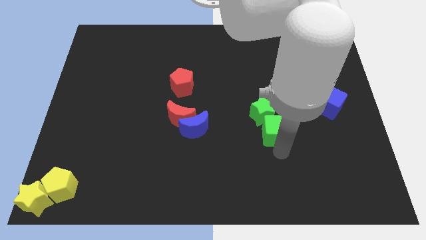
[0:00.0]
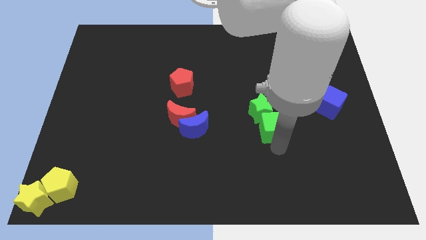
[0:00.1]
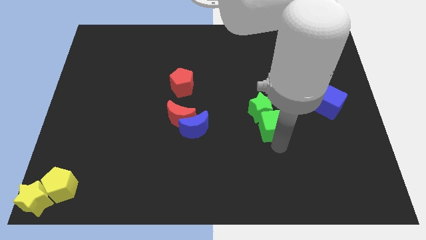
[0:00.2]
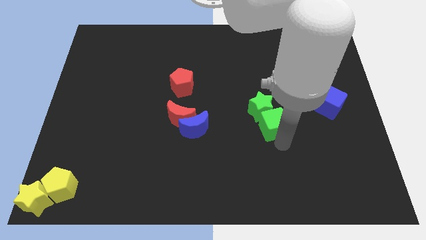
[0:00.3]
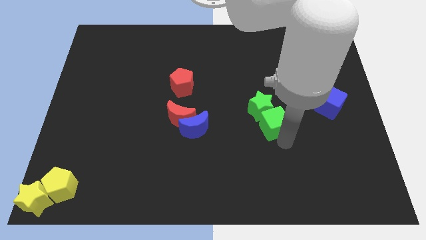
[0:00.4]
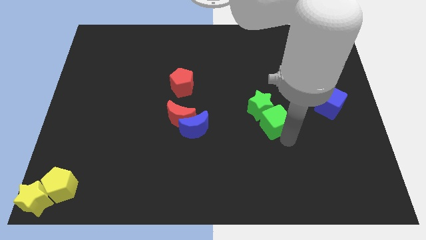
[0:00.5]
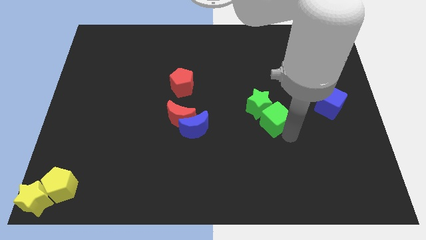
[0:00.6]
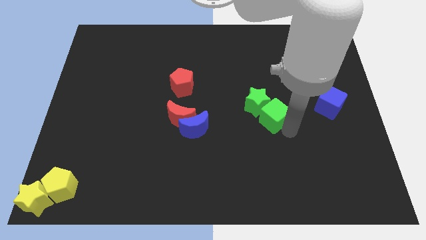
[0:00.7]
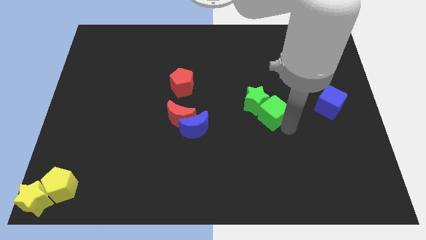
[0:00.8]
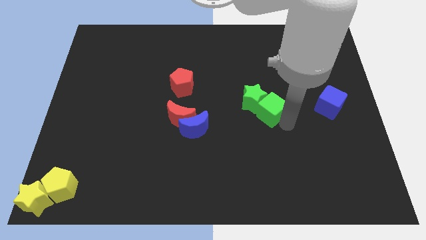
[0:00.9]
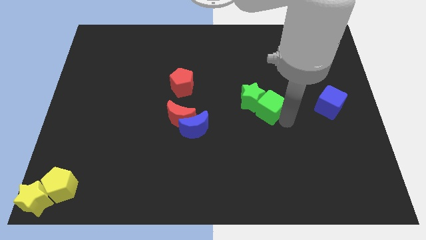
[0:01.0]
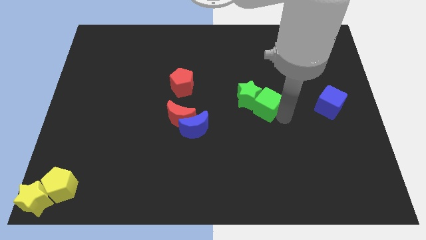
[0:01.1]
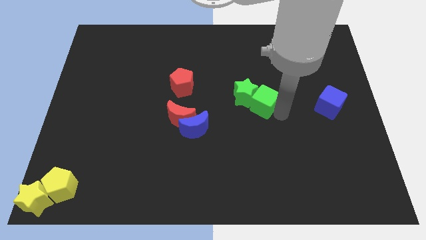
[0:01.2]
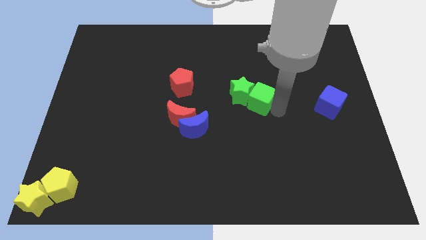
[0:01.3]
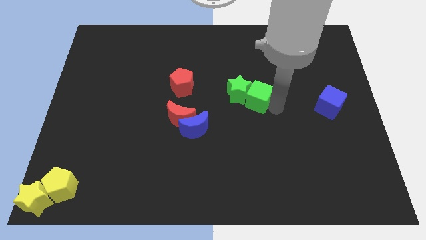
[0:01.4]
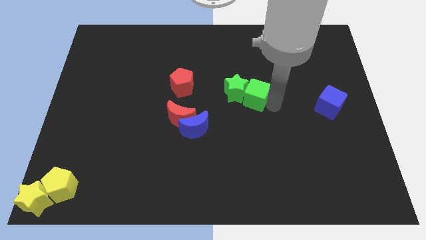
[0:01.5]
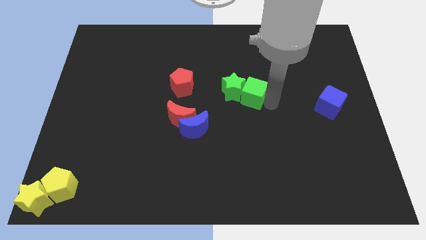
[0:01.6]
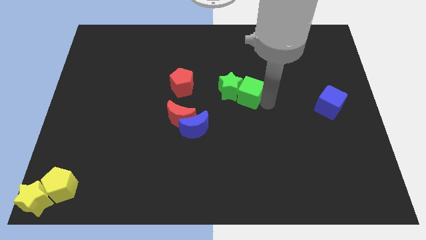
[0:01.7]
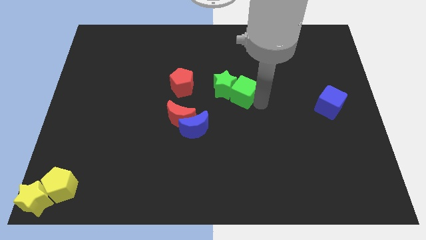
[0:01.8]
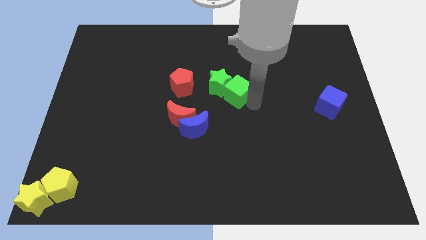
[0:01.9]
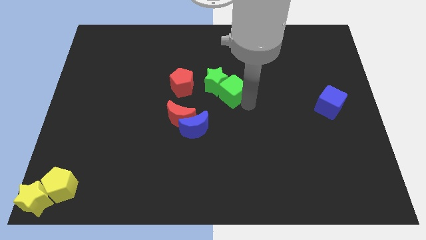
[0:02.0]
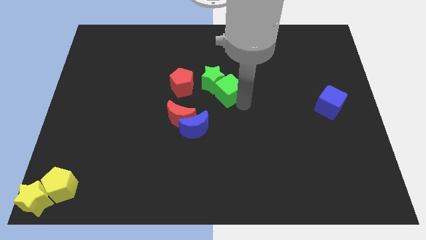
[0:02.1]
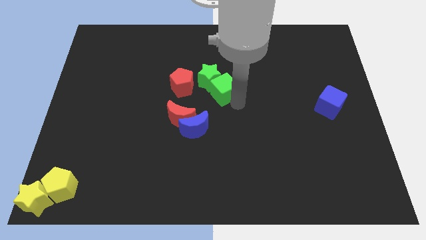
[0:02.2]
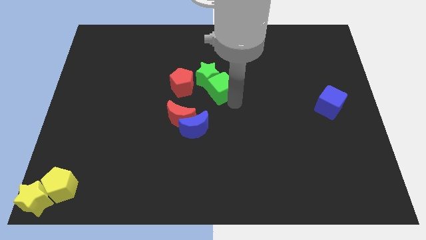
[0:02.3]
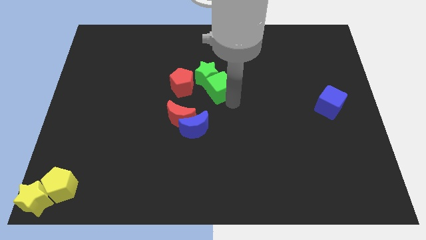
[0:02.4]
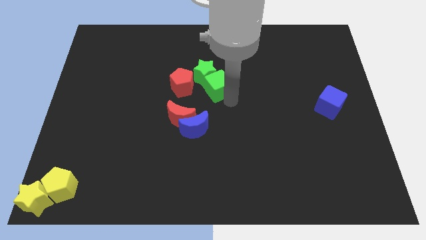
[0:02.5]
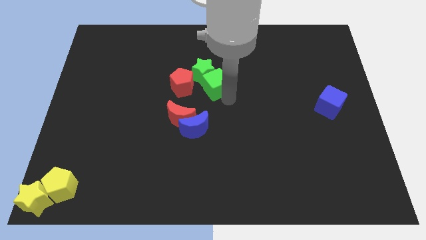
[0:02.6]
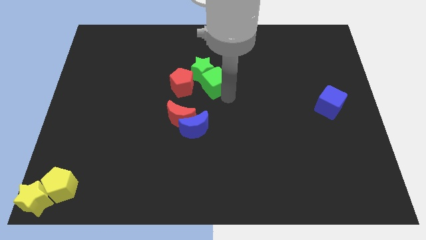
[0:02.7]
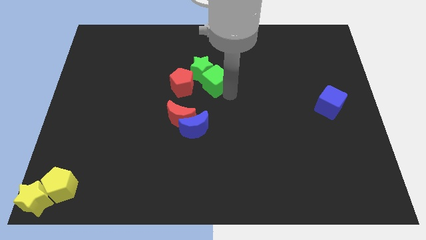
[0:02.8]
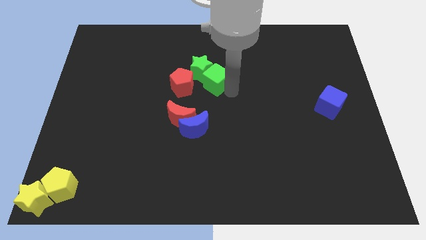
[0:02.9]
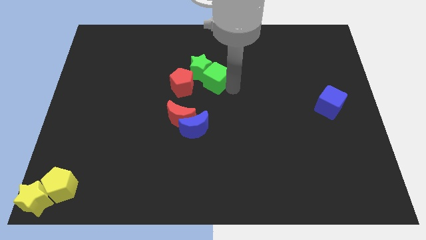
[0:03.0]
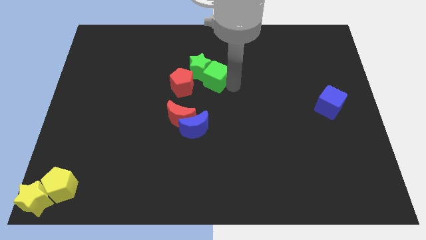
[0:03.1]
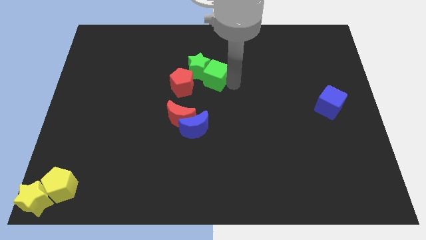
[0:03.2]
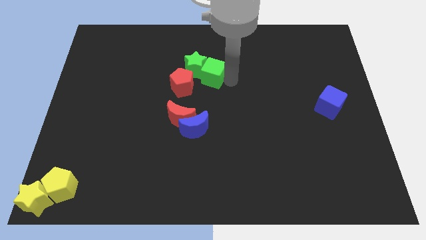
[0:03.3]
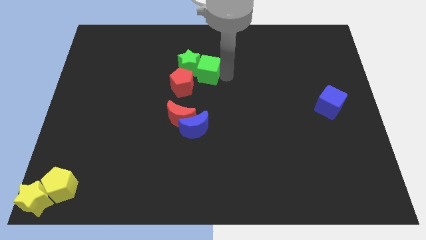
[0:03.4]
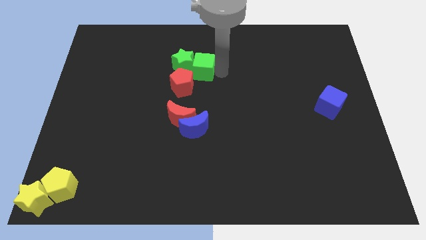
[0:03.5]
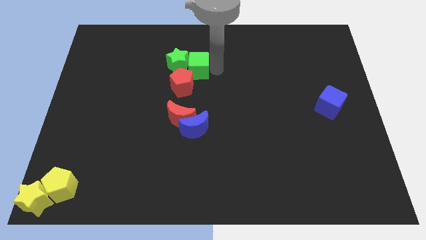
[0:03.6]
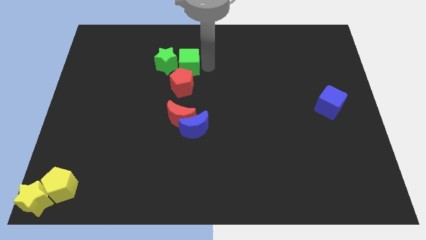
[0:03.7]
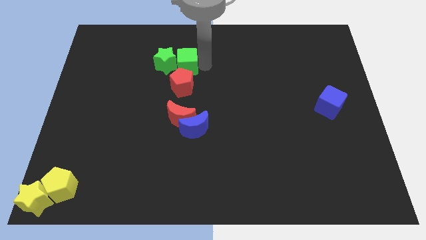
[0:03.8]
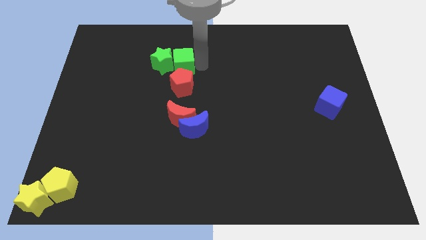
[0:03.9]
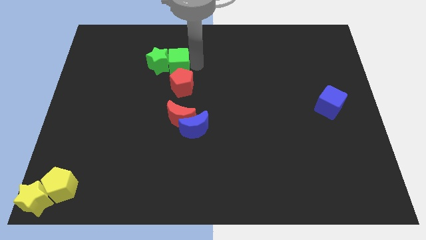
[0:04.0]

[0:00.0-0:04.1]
push the green cube along with green star to the top of the red pentagon

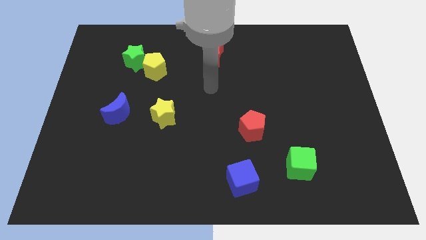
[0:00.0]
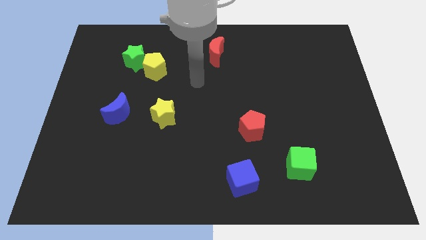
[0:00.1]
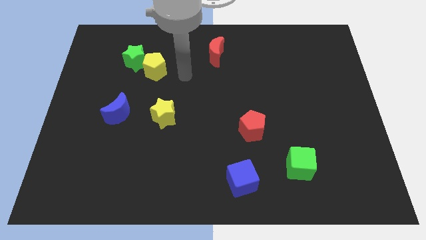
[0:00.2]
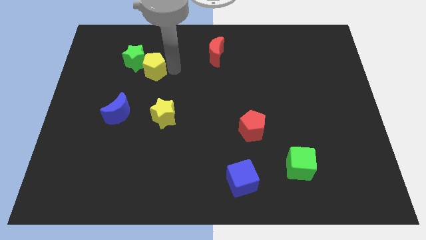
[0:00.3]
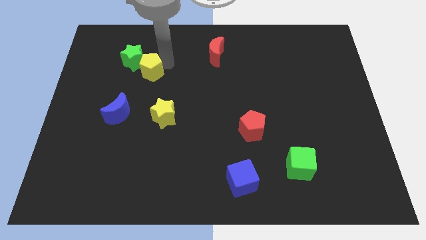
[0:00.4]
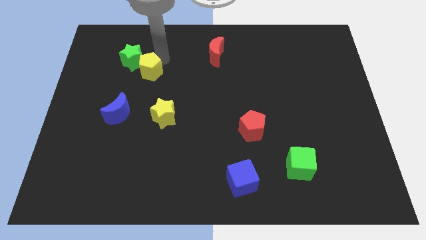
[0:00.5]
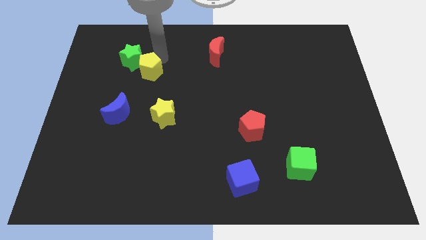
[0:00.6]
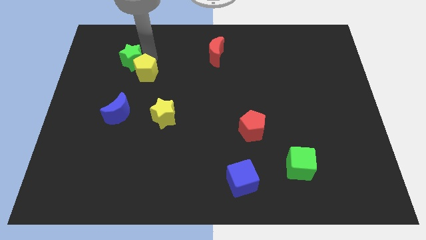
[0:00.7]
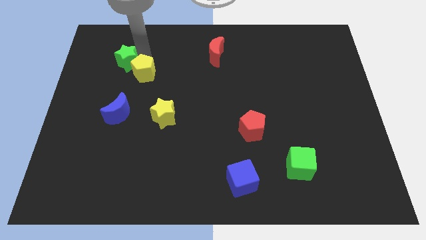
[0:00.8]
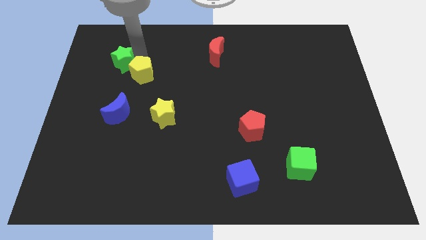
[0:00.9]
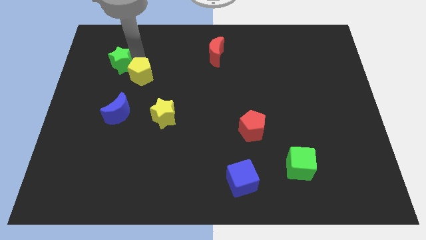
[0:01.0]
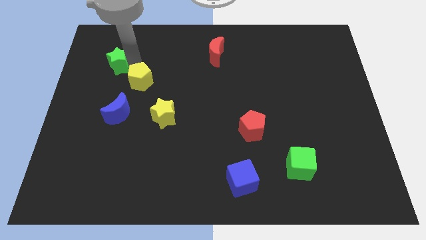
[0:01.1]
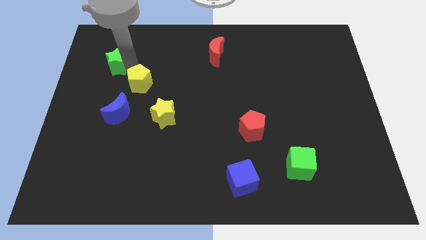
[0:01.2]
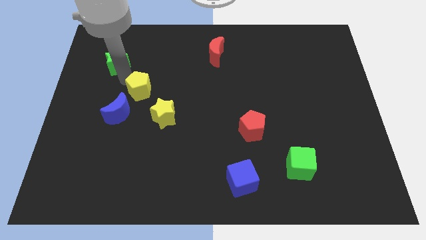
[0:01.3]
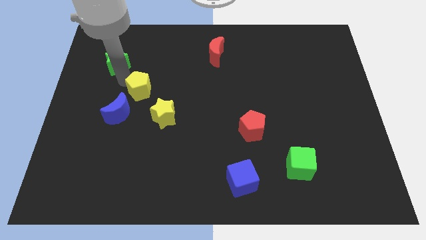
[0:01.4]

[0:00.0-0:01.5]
push the yellow pentagon into the blue crescent

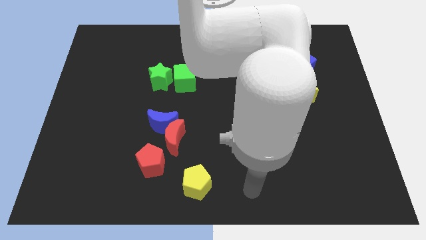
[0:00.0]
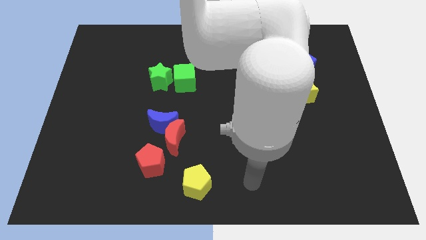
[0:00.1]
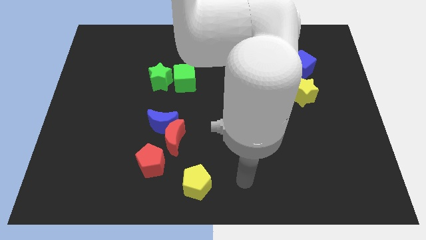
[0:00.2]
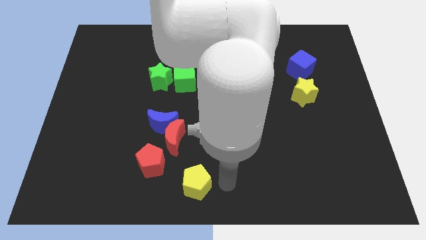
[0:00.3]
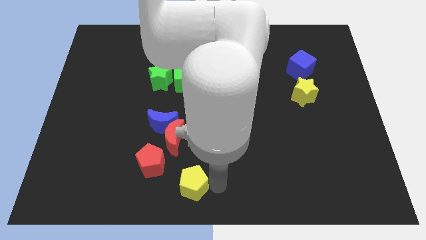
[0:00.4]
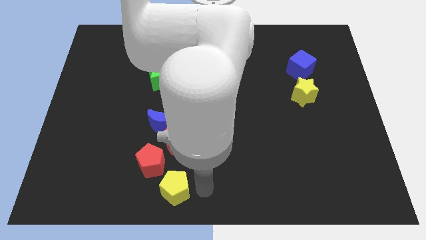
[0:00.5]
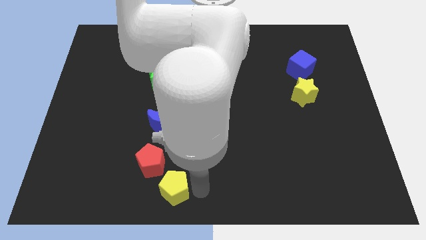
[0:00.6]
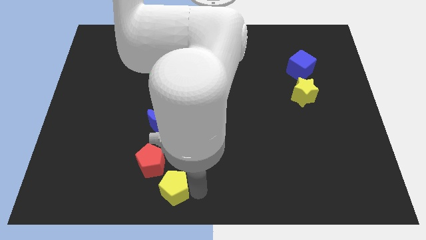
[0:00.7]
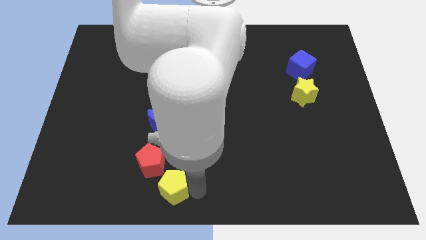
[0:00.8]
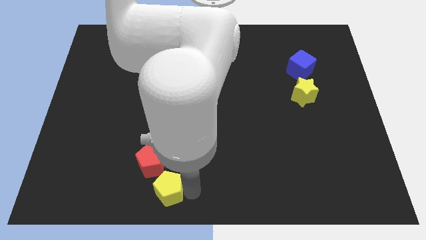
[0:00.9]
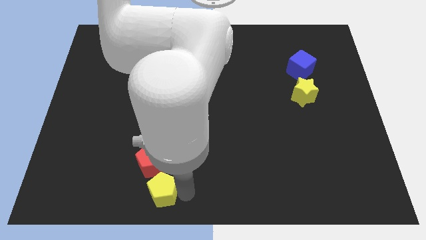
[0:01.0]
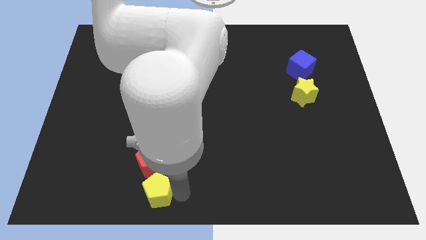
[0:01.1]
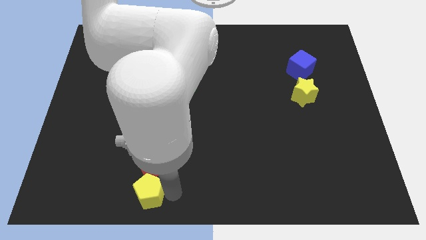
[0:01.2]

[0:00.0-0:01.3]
move the yellow pentagon below the red pentagon

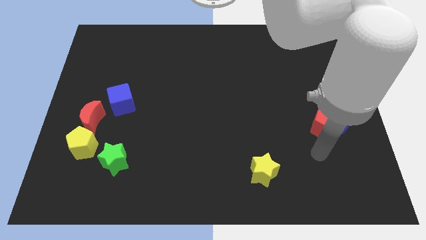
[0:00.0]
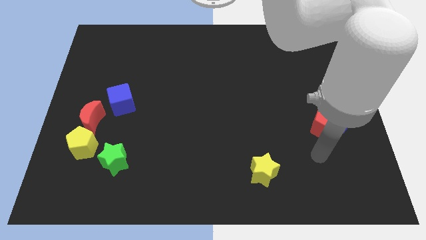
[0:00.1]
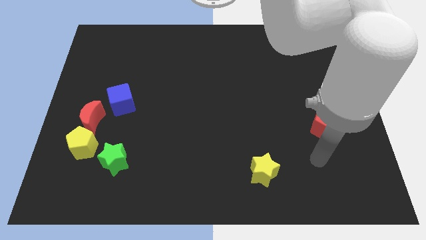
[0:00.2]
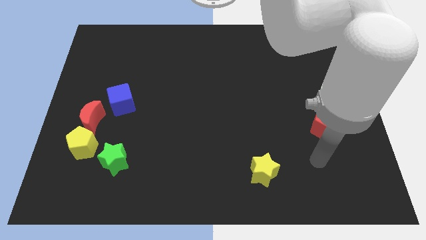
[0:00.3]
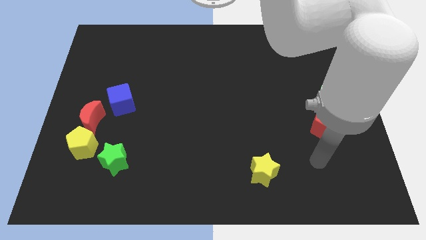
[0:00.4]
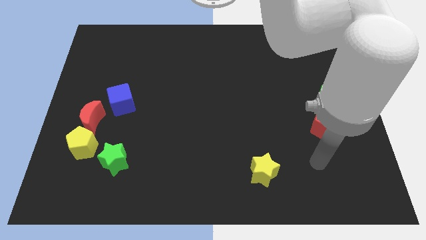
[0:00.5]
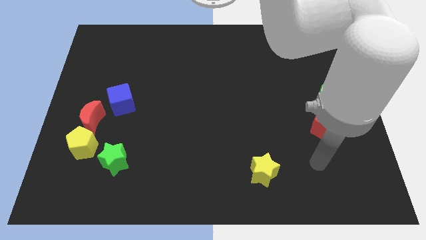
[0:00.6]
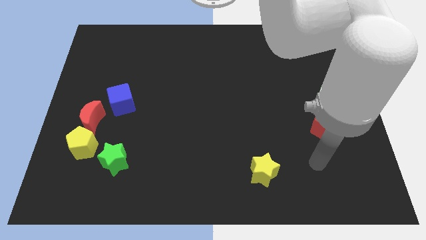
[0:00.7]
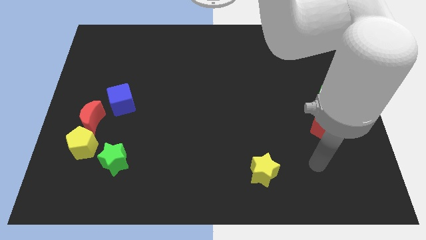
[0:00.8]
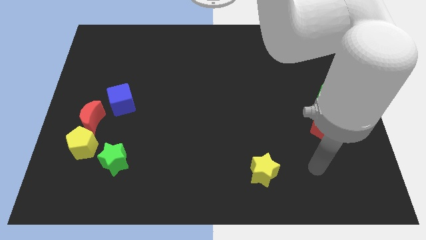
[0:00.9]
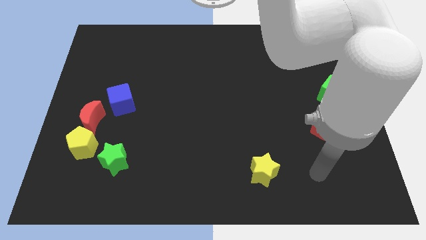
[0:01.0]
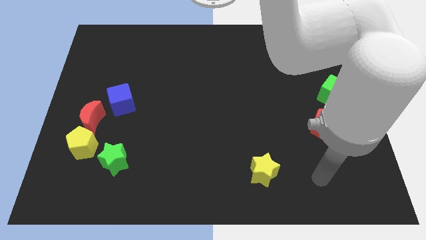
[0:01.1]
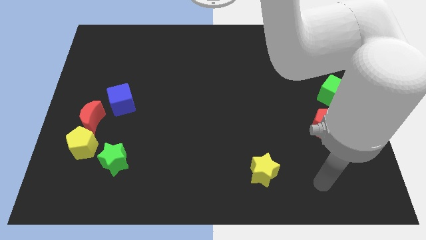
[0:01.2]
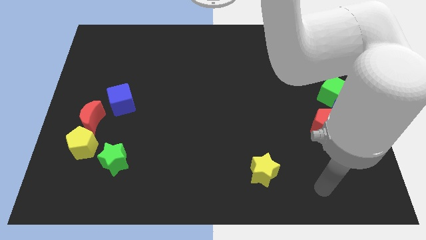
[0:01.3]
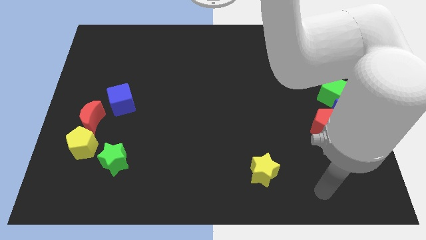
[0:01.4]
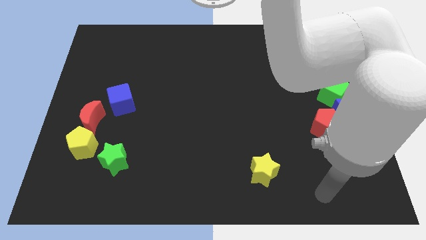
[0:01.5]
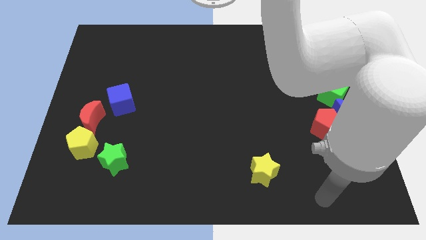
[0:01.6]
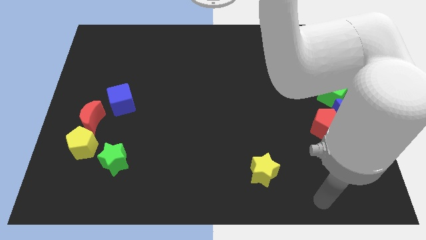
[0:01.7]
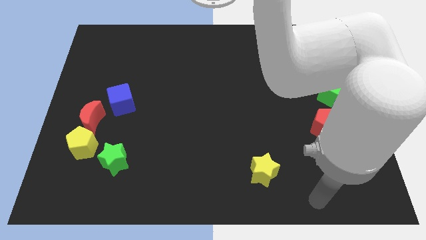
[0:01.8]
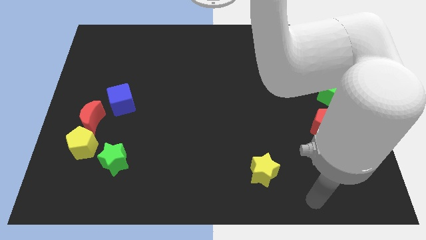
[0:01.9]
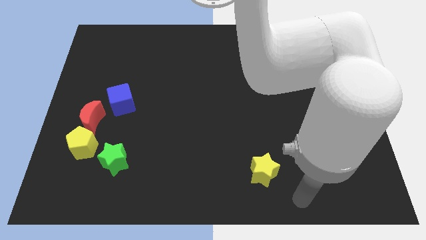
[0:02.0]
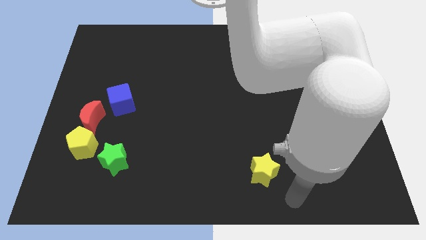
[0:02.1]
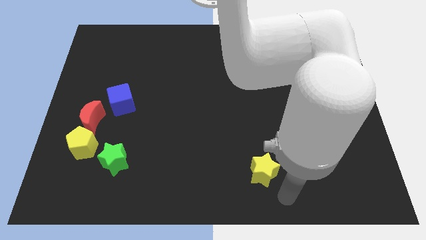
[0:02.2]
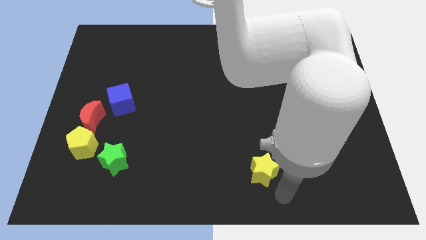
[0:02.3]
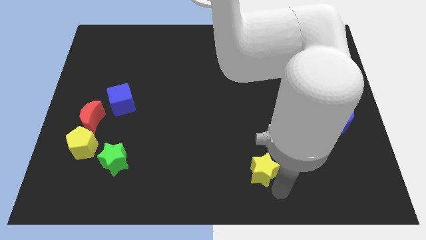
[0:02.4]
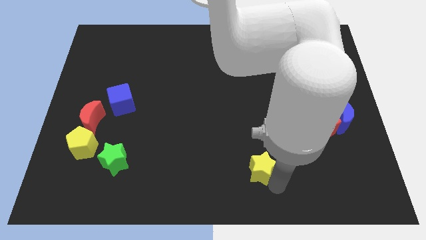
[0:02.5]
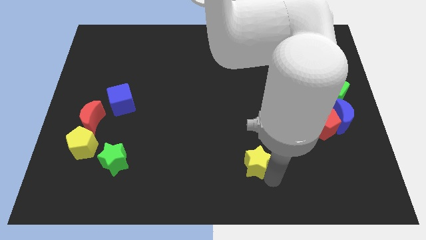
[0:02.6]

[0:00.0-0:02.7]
go near yellow star
